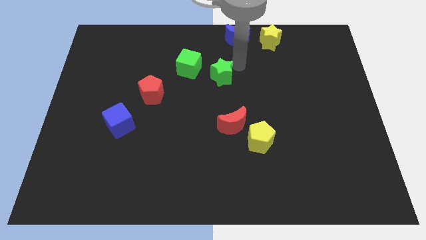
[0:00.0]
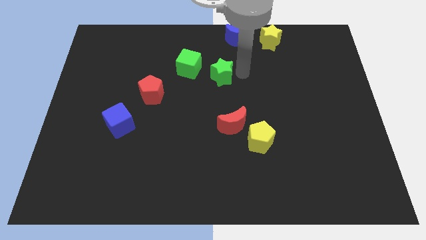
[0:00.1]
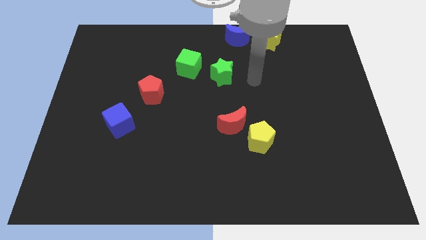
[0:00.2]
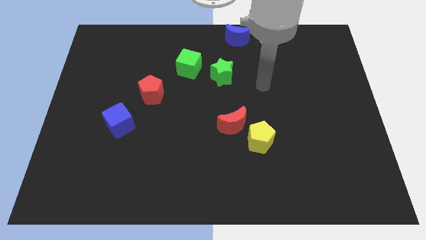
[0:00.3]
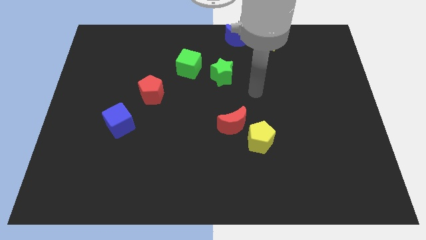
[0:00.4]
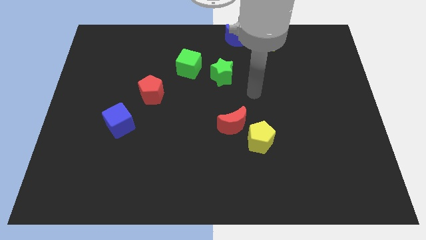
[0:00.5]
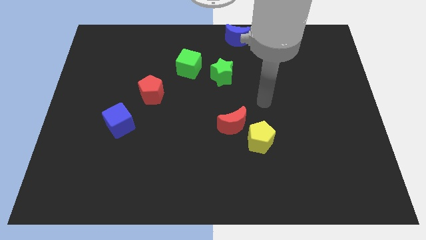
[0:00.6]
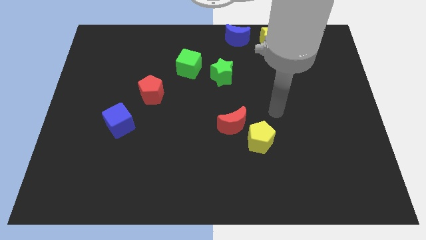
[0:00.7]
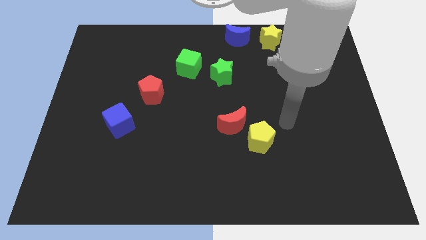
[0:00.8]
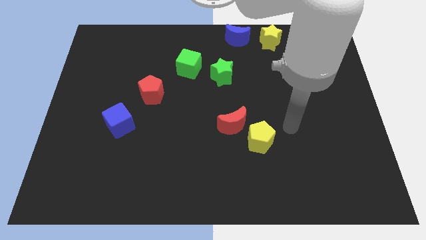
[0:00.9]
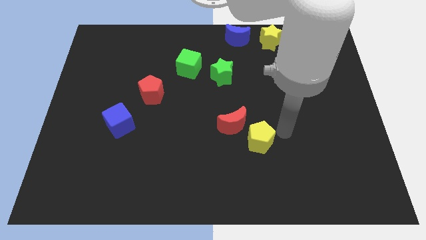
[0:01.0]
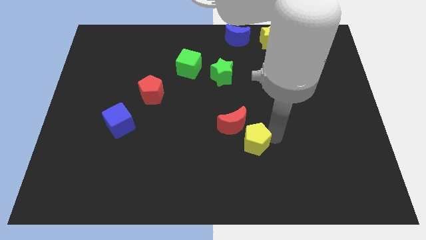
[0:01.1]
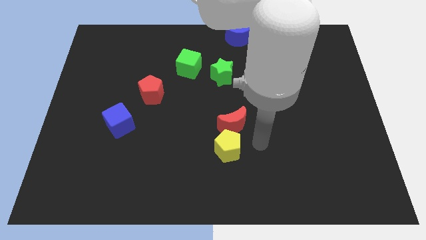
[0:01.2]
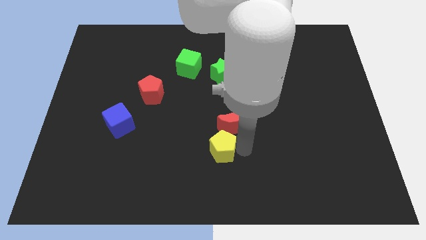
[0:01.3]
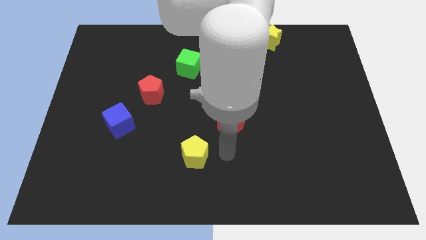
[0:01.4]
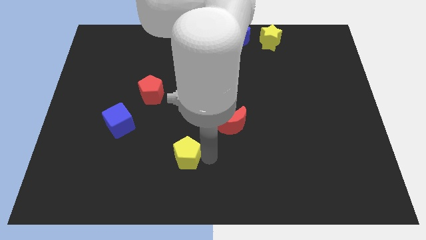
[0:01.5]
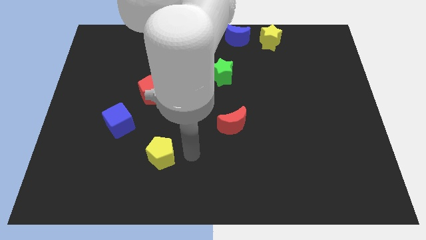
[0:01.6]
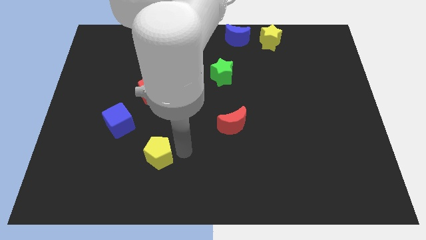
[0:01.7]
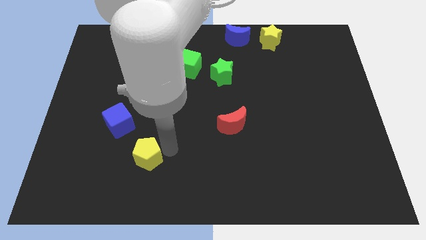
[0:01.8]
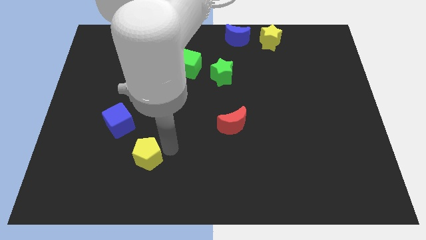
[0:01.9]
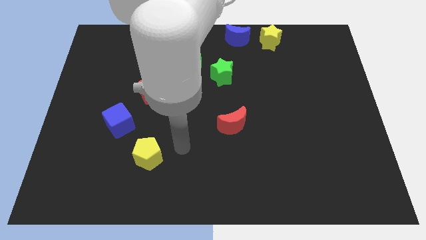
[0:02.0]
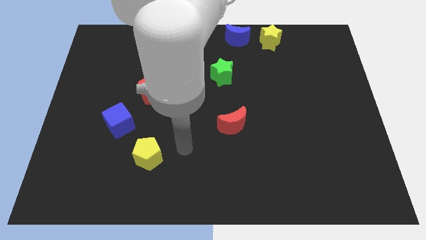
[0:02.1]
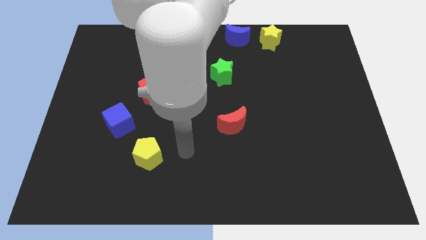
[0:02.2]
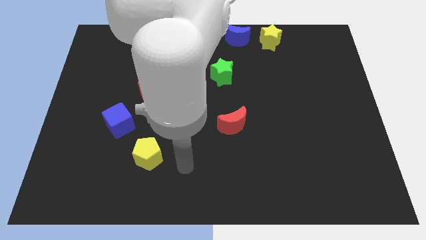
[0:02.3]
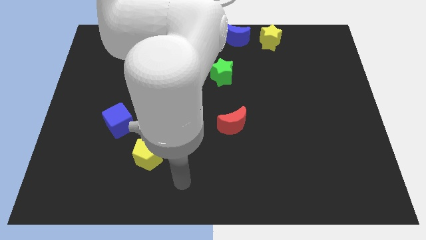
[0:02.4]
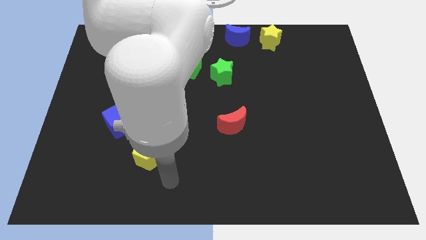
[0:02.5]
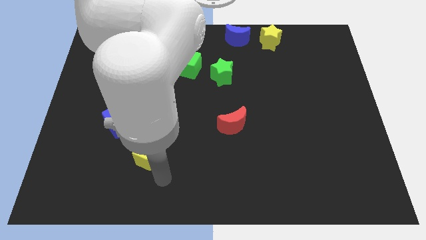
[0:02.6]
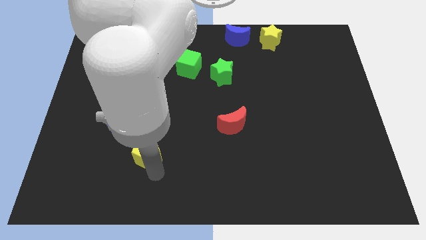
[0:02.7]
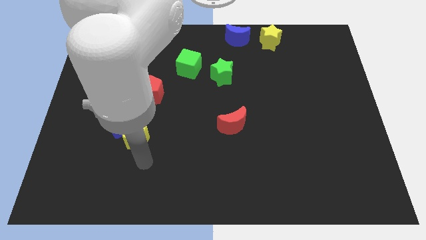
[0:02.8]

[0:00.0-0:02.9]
separate the yellow pentagon from the red moon

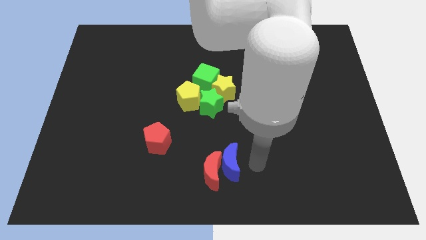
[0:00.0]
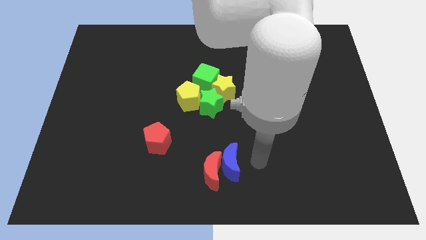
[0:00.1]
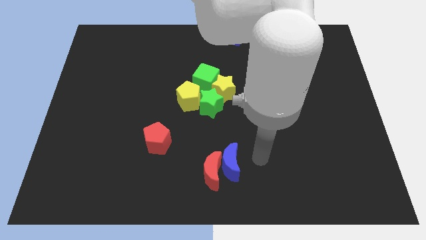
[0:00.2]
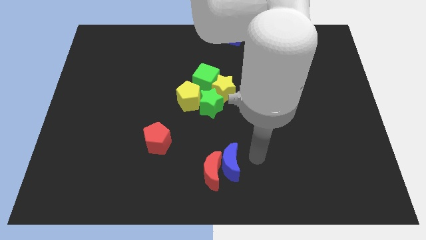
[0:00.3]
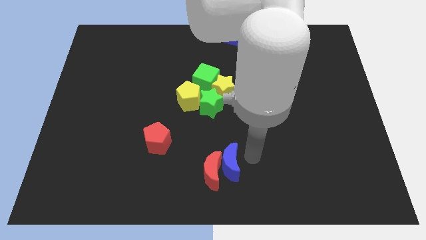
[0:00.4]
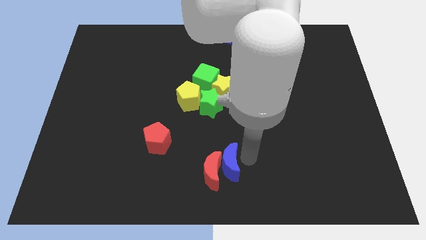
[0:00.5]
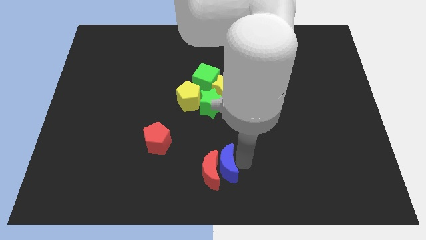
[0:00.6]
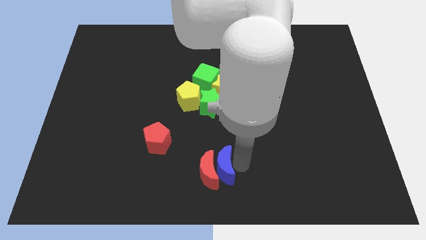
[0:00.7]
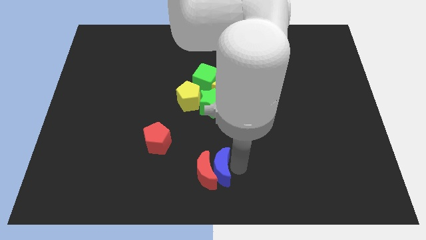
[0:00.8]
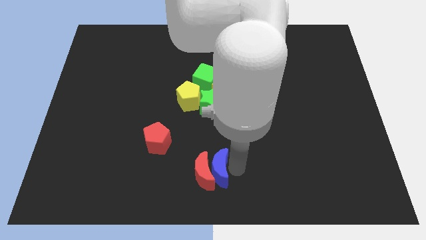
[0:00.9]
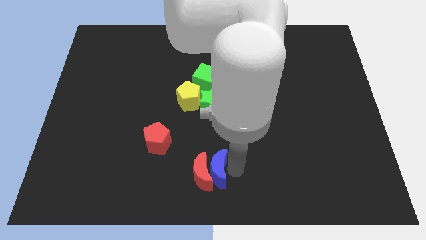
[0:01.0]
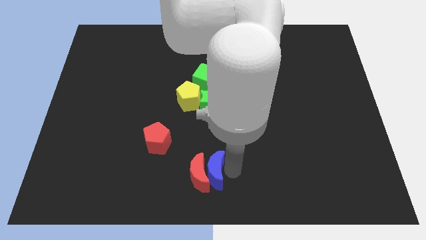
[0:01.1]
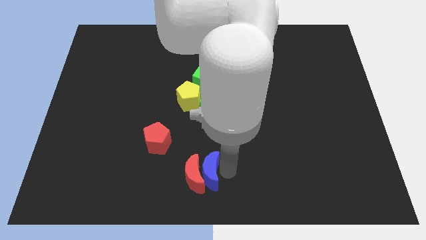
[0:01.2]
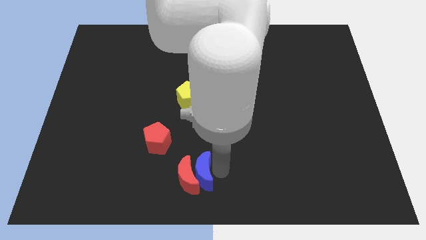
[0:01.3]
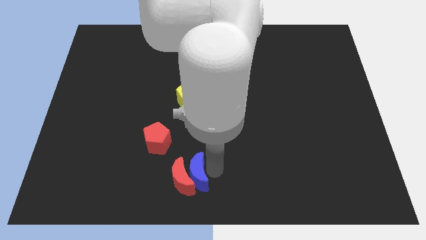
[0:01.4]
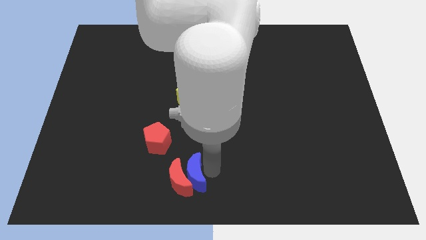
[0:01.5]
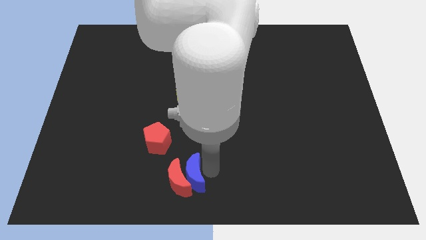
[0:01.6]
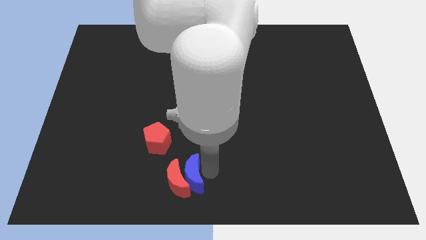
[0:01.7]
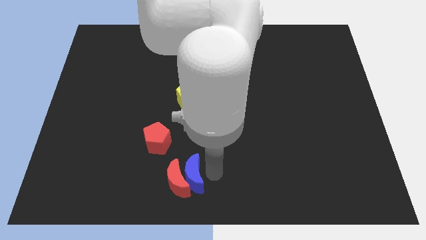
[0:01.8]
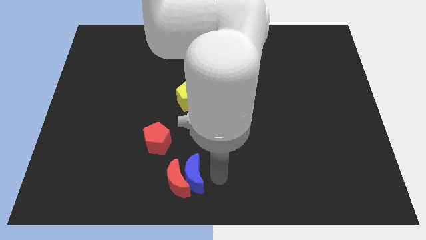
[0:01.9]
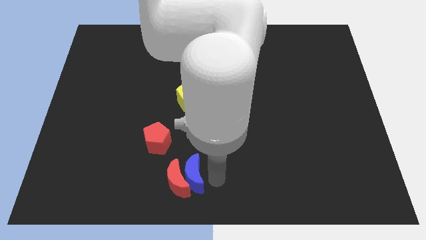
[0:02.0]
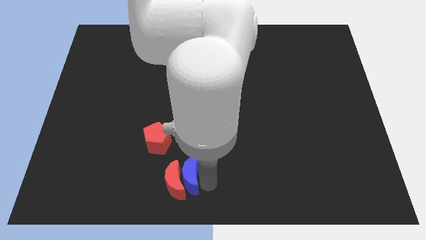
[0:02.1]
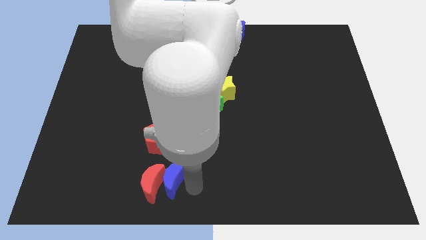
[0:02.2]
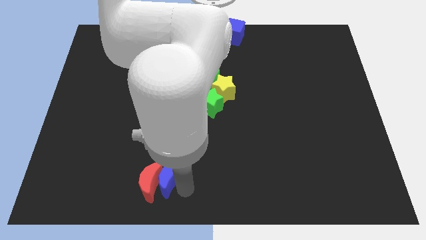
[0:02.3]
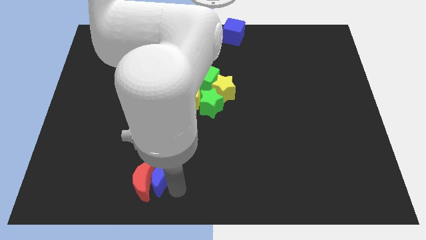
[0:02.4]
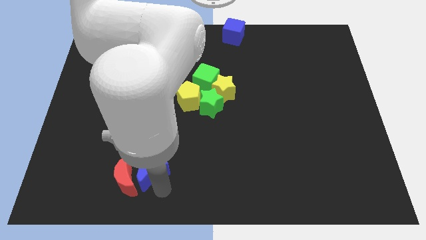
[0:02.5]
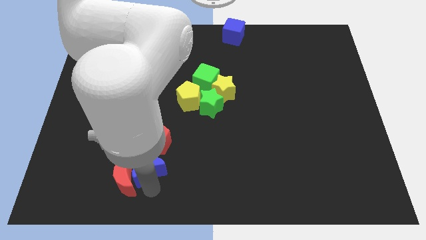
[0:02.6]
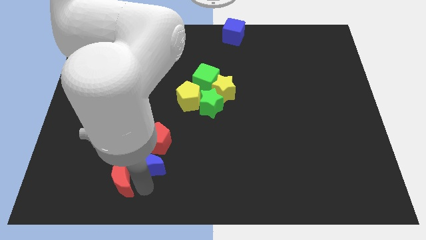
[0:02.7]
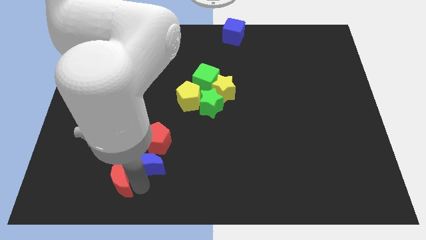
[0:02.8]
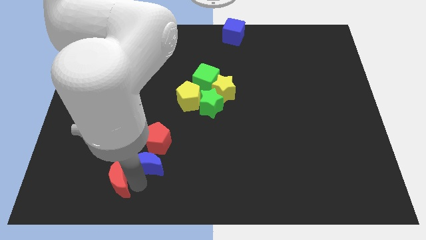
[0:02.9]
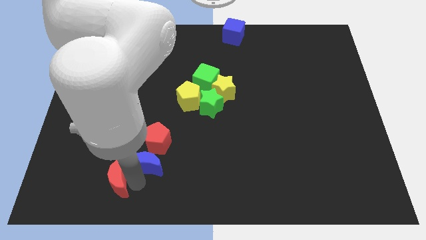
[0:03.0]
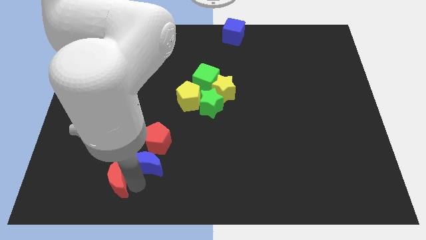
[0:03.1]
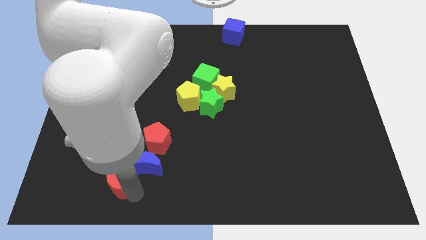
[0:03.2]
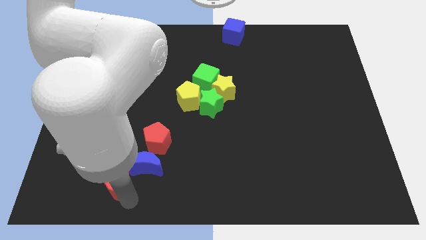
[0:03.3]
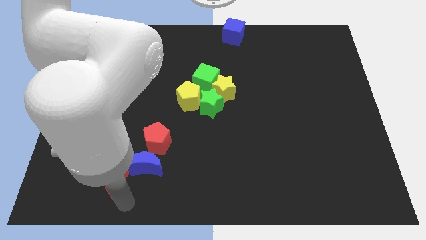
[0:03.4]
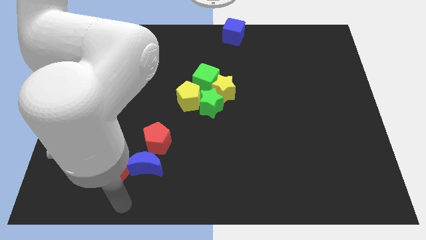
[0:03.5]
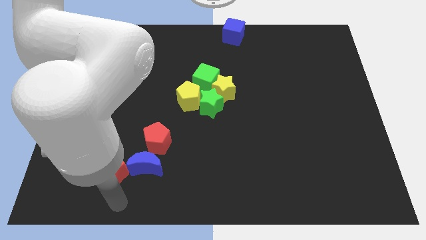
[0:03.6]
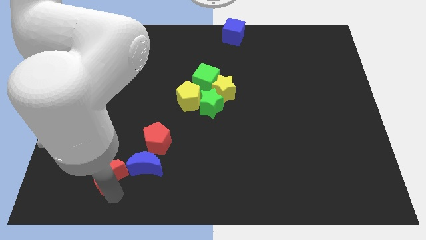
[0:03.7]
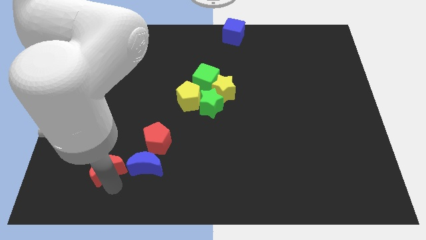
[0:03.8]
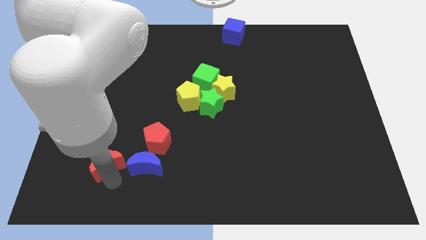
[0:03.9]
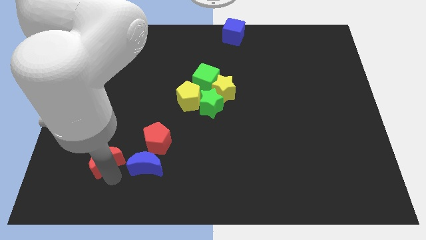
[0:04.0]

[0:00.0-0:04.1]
move red moon to the left of blue moon

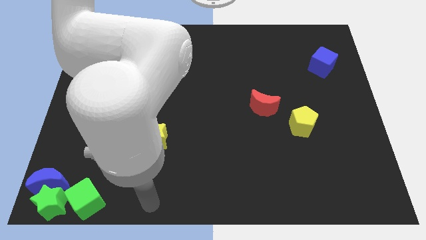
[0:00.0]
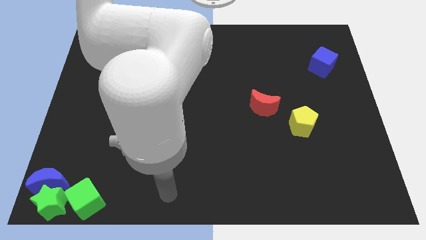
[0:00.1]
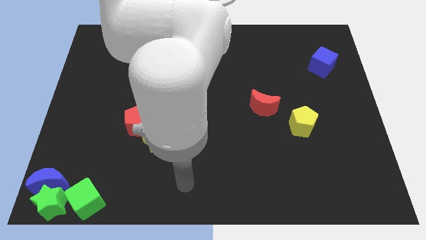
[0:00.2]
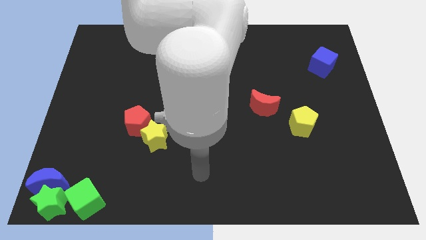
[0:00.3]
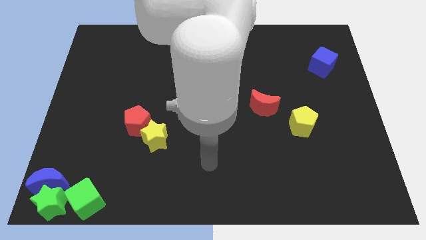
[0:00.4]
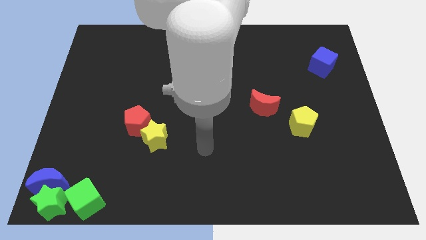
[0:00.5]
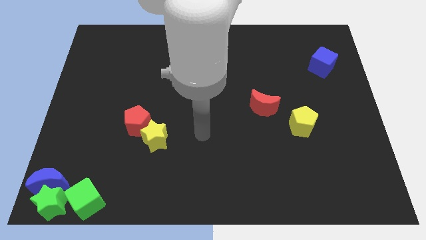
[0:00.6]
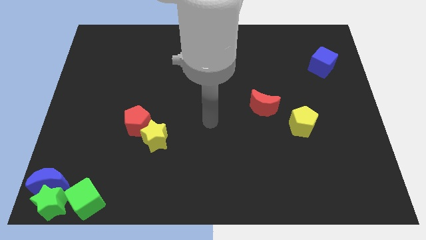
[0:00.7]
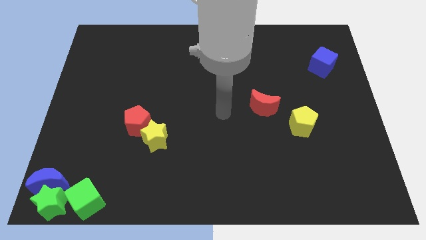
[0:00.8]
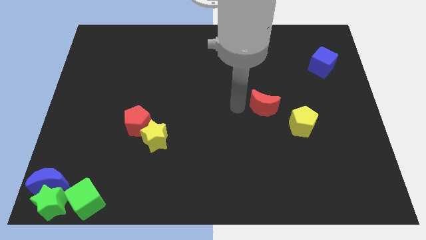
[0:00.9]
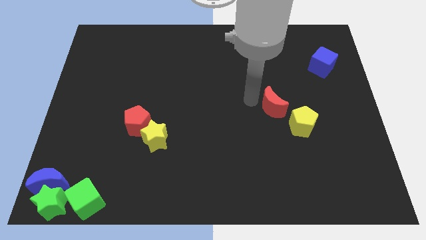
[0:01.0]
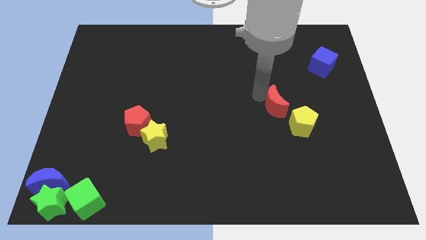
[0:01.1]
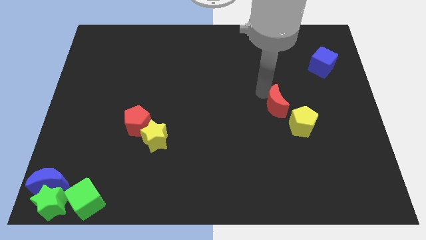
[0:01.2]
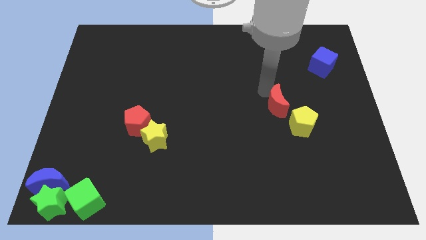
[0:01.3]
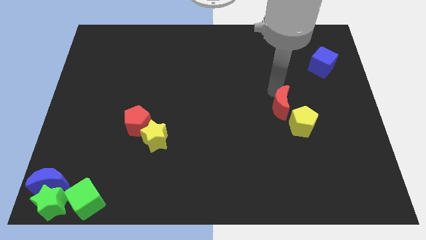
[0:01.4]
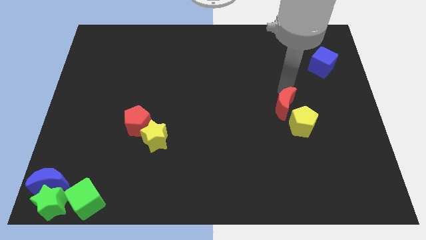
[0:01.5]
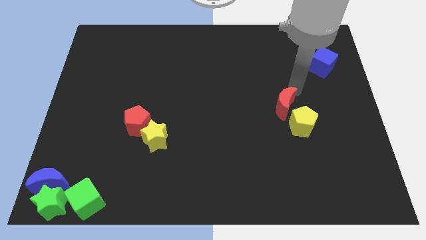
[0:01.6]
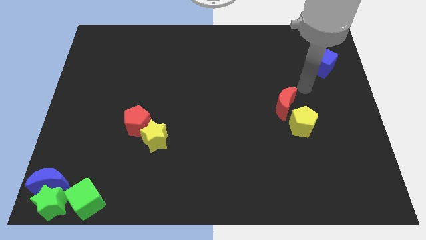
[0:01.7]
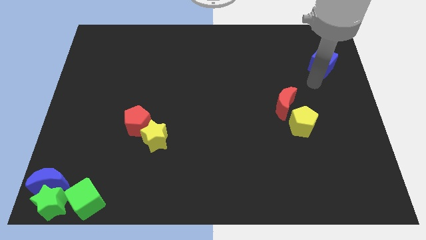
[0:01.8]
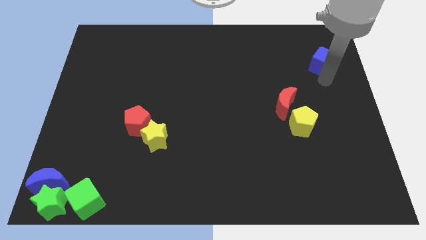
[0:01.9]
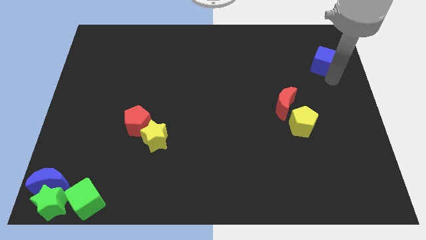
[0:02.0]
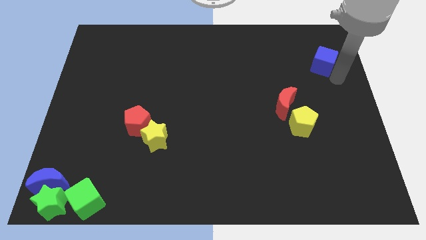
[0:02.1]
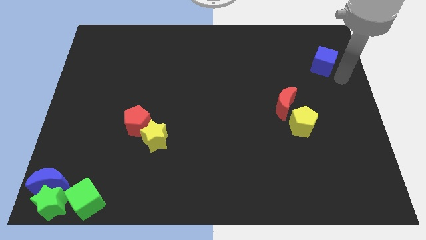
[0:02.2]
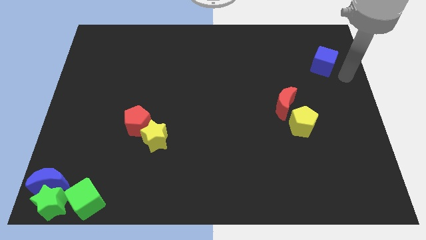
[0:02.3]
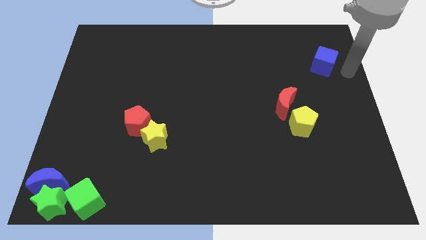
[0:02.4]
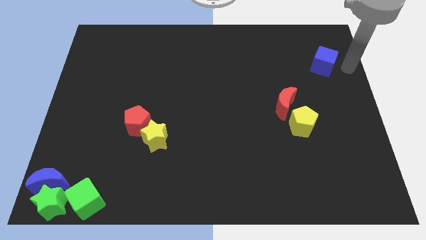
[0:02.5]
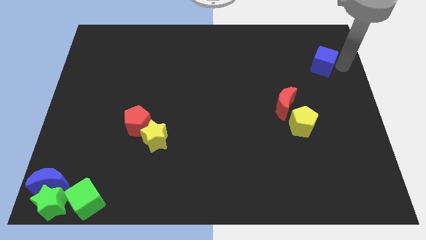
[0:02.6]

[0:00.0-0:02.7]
move the arm to the blue cube
